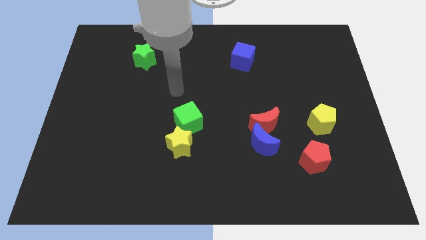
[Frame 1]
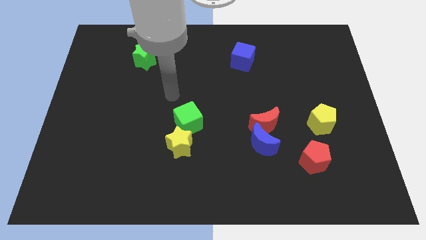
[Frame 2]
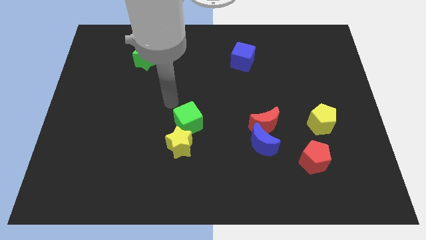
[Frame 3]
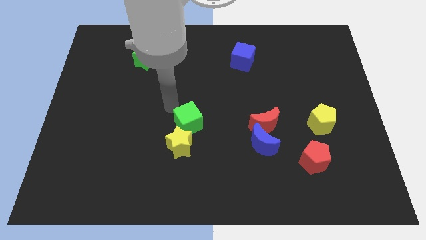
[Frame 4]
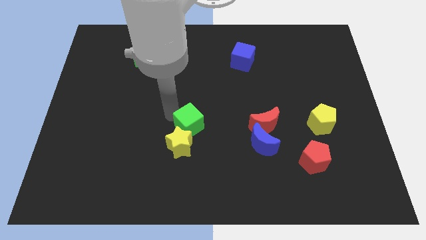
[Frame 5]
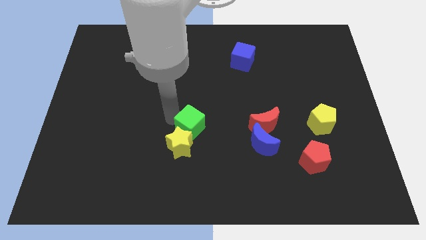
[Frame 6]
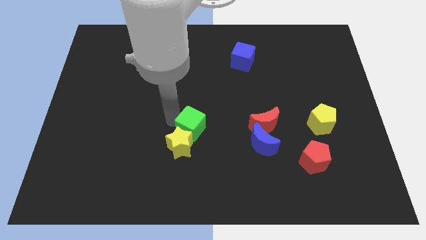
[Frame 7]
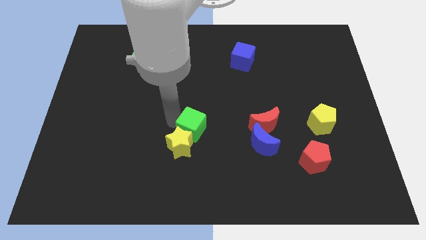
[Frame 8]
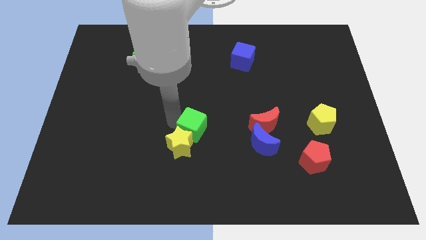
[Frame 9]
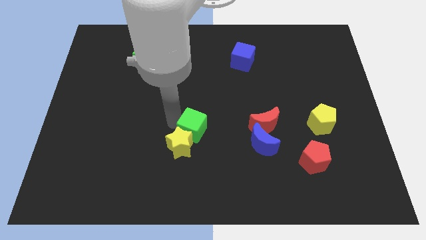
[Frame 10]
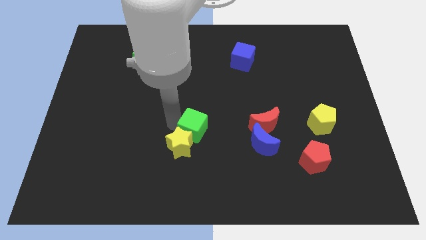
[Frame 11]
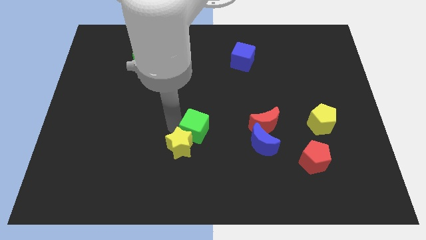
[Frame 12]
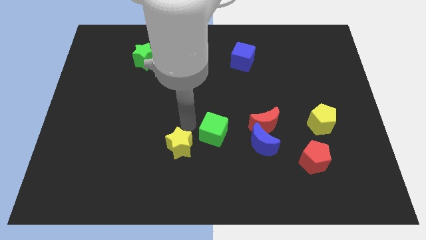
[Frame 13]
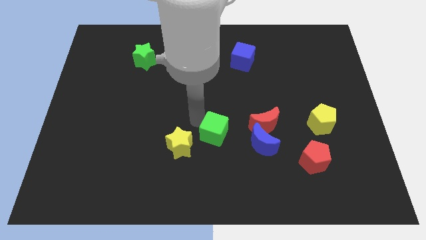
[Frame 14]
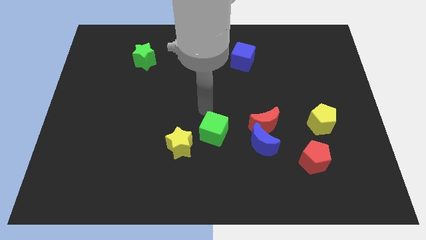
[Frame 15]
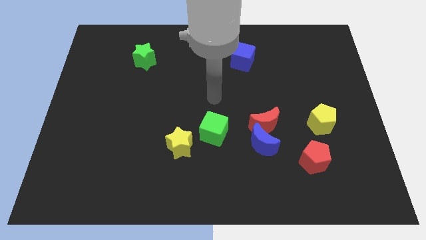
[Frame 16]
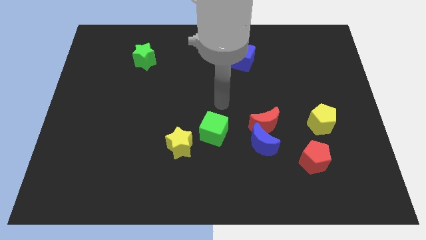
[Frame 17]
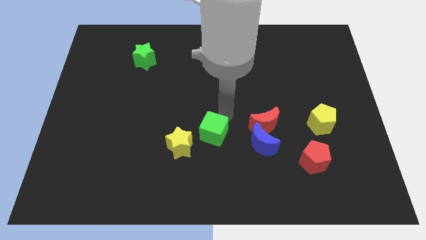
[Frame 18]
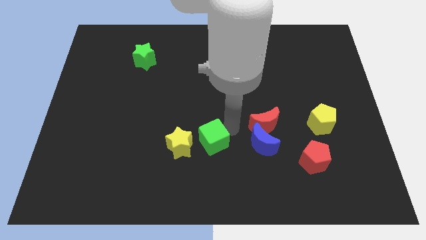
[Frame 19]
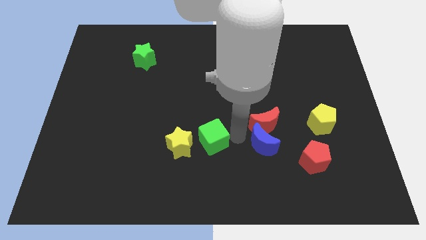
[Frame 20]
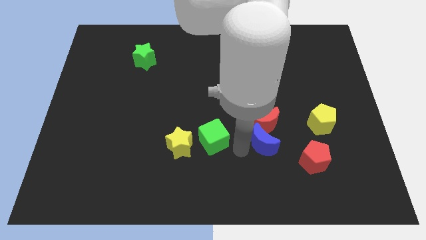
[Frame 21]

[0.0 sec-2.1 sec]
place the green cube in between yellow star and blue crescent

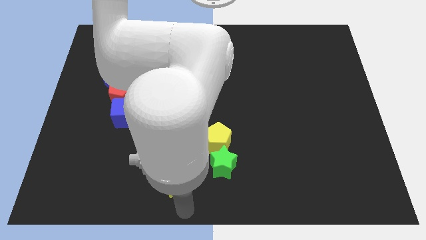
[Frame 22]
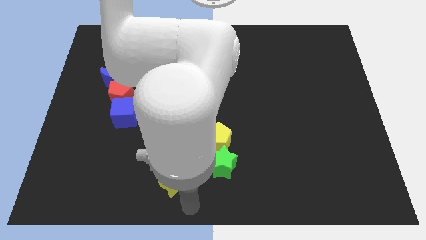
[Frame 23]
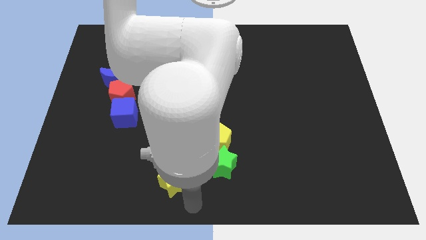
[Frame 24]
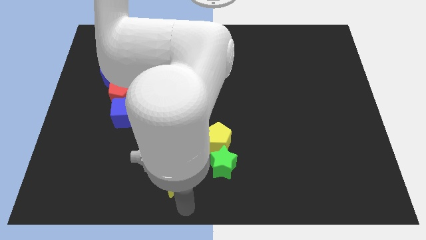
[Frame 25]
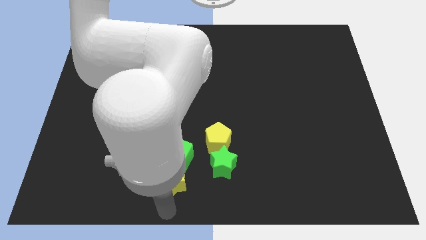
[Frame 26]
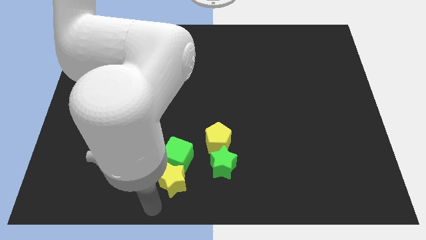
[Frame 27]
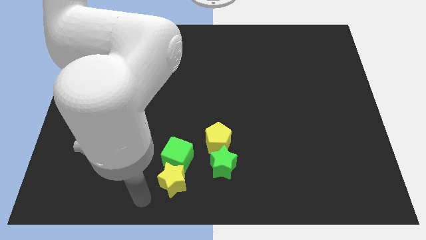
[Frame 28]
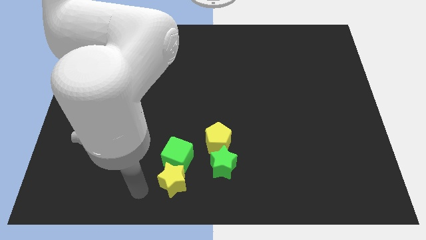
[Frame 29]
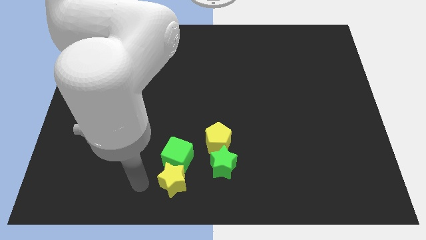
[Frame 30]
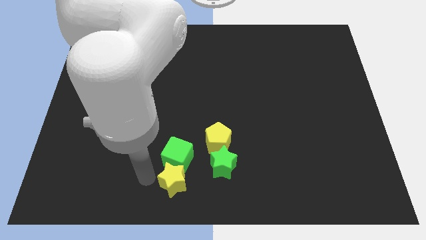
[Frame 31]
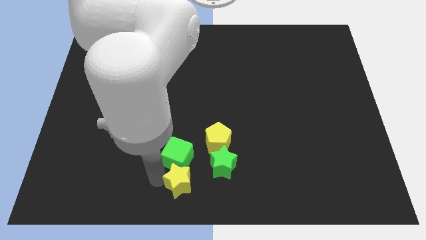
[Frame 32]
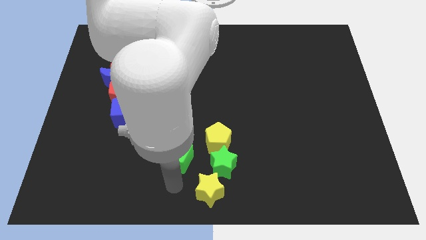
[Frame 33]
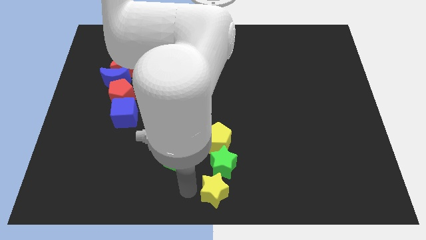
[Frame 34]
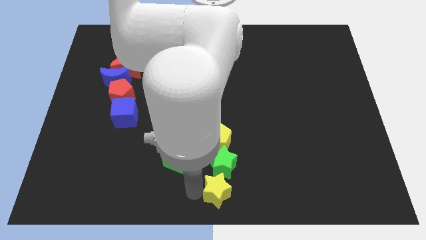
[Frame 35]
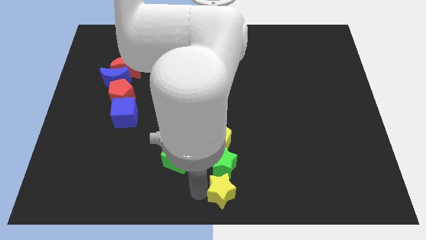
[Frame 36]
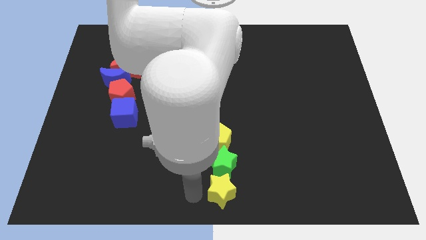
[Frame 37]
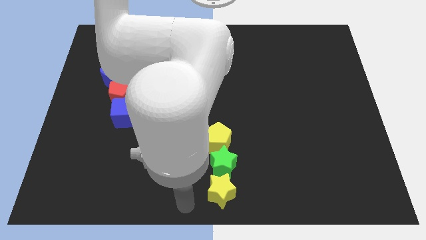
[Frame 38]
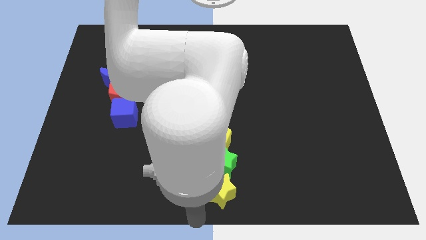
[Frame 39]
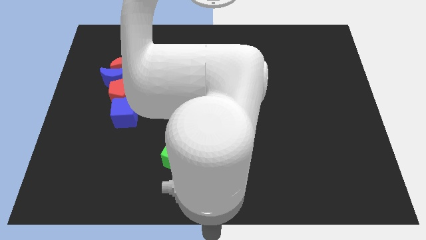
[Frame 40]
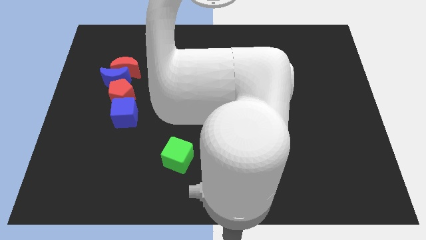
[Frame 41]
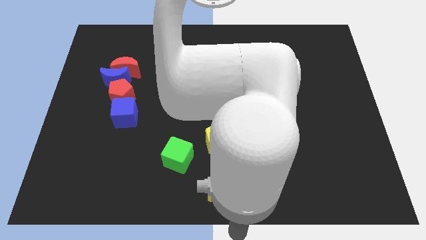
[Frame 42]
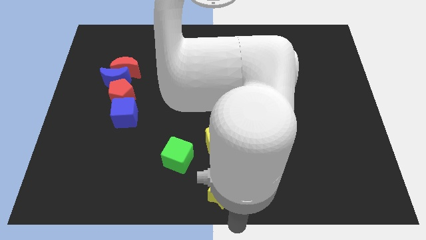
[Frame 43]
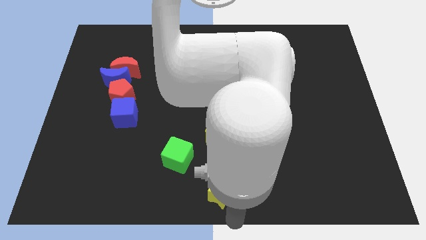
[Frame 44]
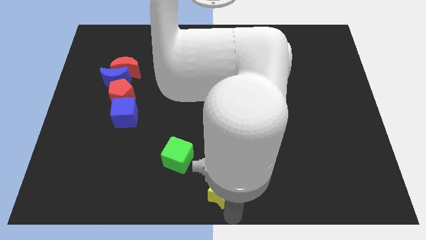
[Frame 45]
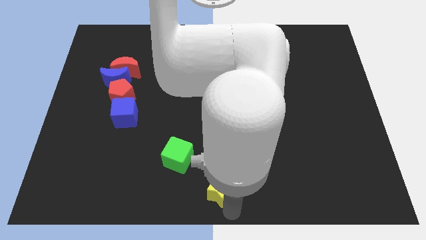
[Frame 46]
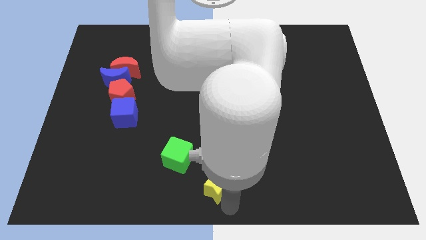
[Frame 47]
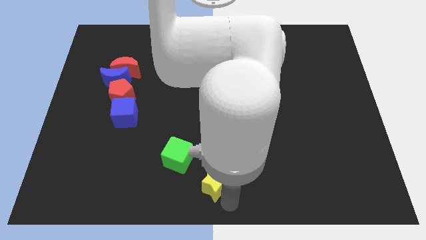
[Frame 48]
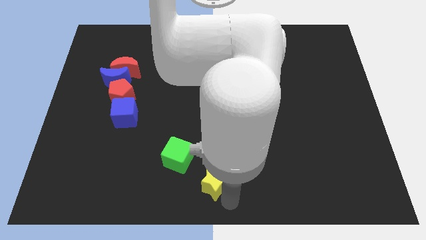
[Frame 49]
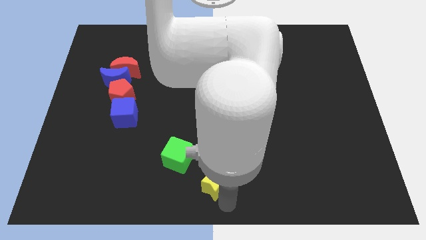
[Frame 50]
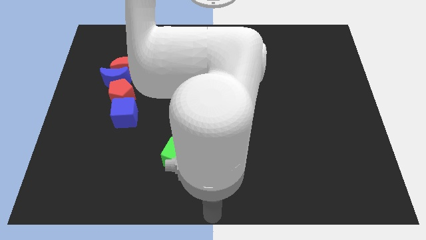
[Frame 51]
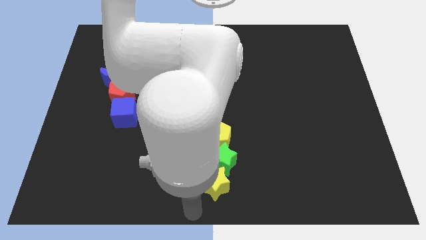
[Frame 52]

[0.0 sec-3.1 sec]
push the star to the bottom of the green star

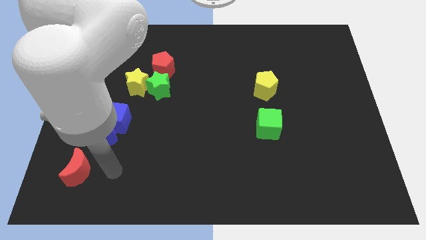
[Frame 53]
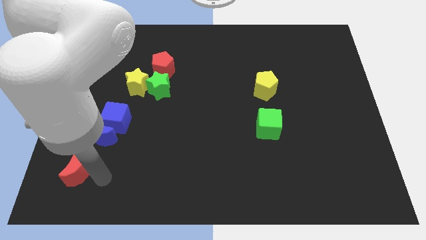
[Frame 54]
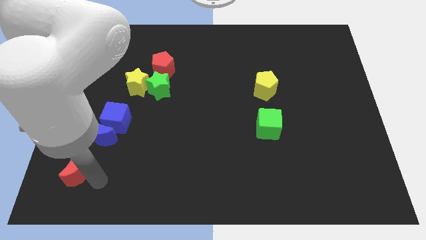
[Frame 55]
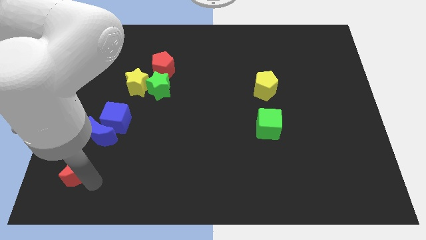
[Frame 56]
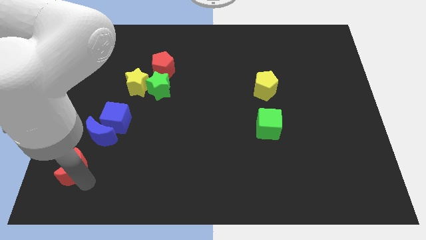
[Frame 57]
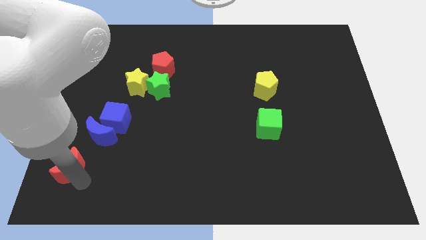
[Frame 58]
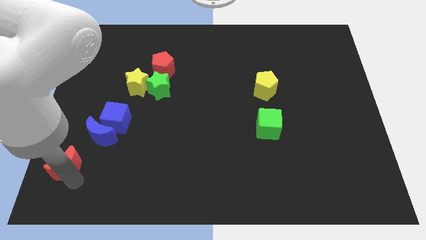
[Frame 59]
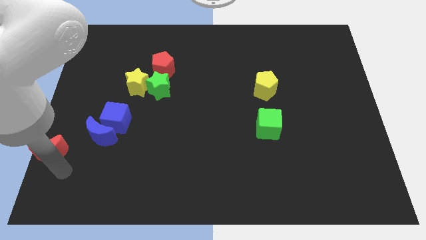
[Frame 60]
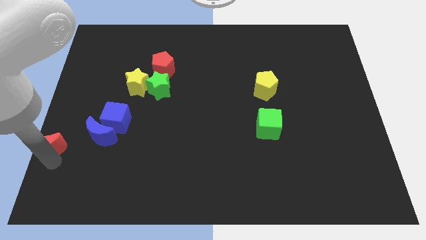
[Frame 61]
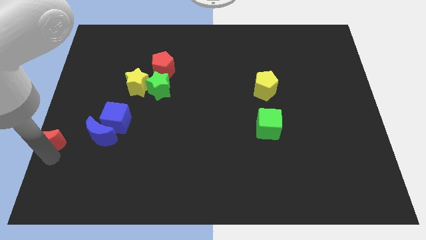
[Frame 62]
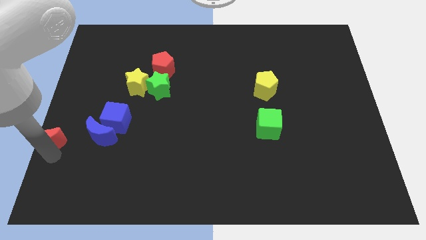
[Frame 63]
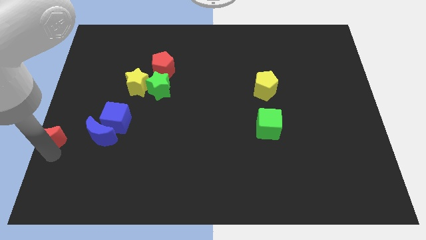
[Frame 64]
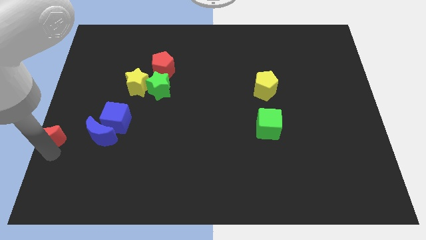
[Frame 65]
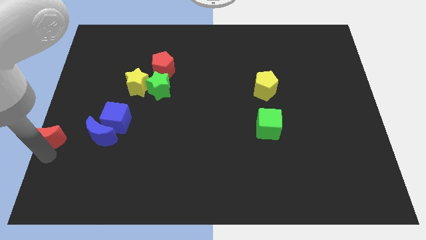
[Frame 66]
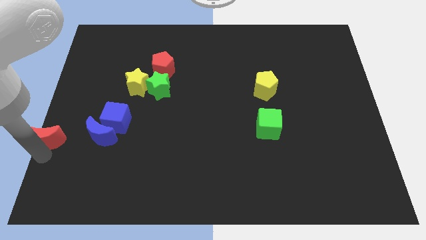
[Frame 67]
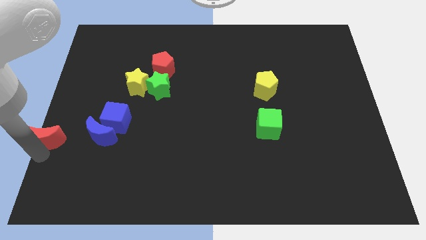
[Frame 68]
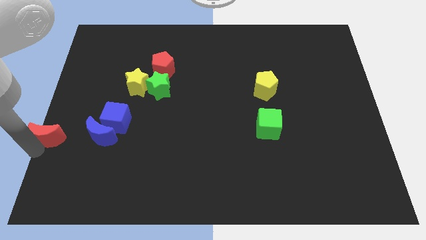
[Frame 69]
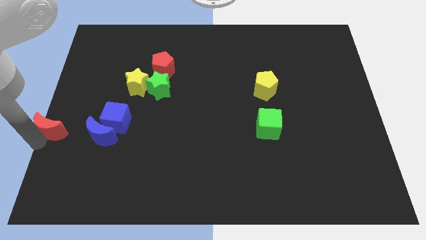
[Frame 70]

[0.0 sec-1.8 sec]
place the red moon to the left of blue moon

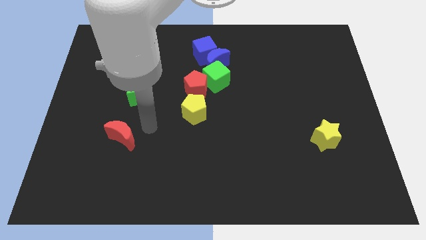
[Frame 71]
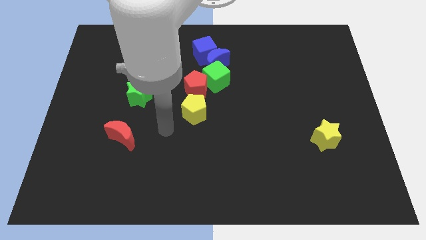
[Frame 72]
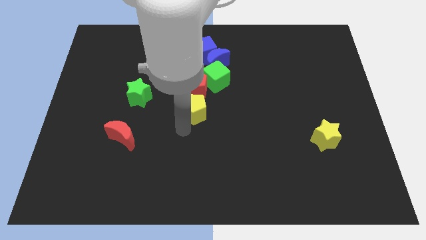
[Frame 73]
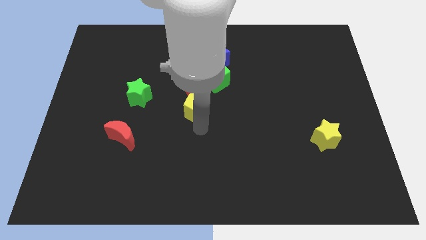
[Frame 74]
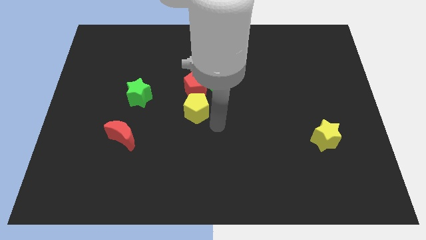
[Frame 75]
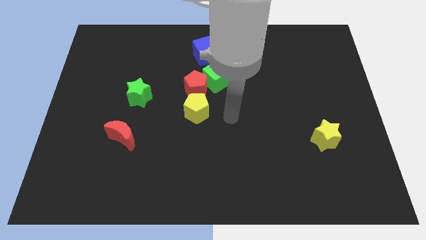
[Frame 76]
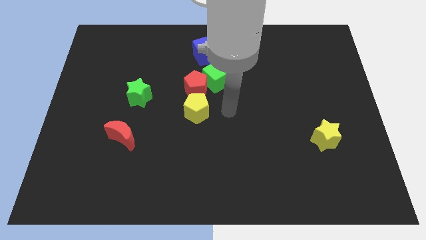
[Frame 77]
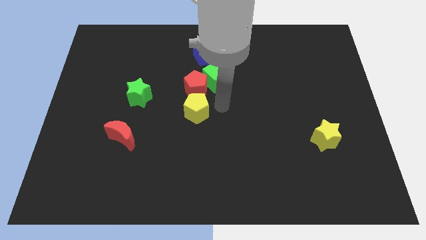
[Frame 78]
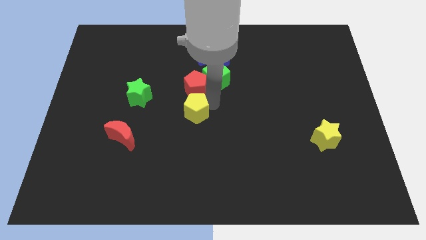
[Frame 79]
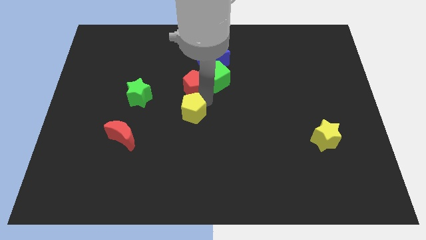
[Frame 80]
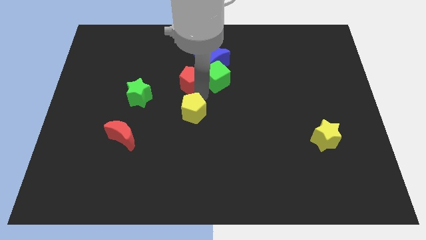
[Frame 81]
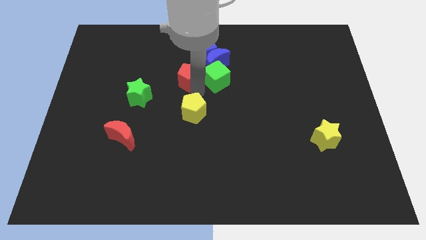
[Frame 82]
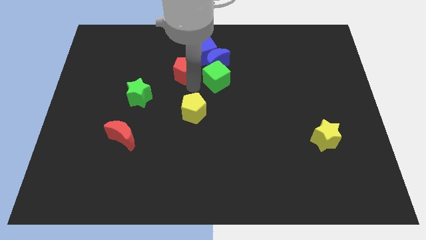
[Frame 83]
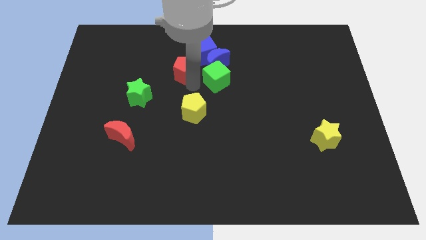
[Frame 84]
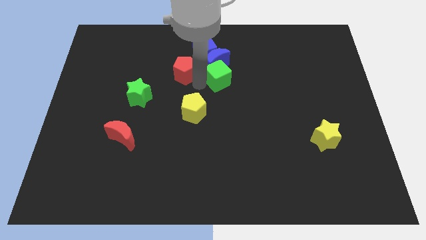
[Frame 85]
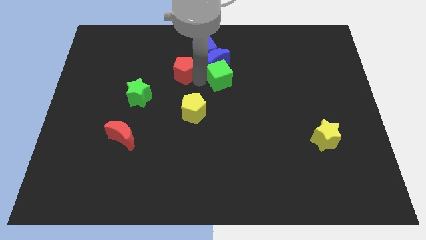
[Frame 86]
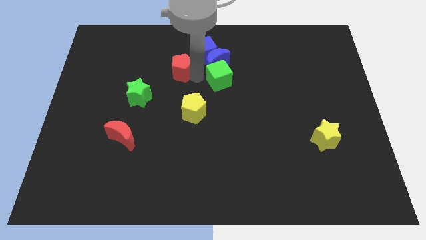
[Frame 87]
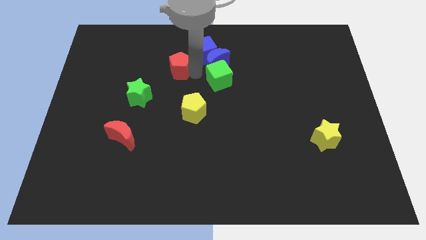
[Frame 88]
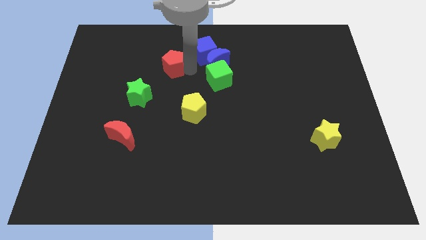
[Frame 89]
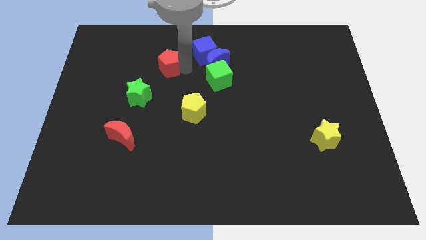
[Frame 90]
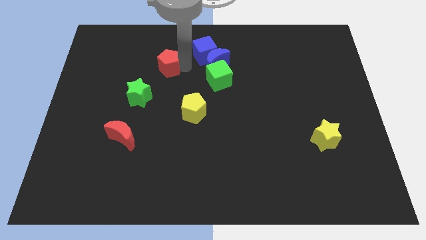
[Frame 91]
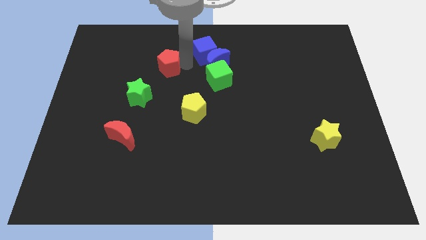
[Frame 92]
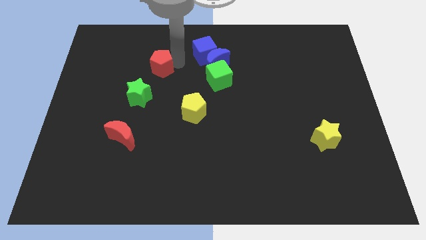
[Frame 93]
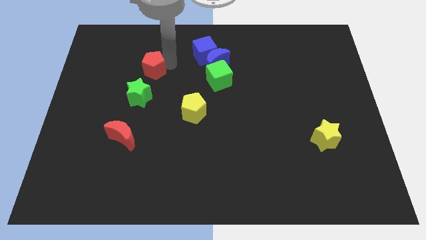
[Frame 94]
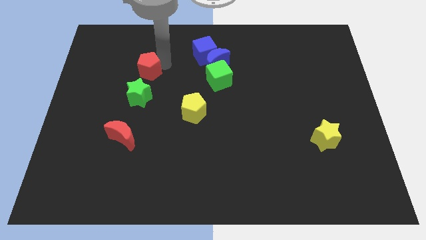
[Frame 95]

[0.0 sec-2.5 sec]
separate the green cube and pentagons
